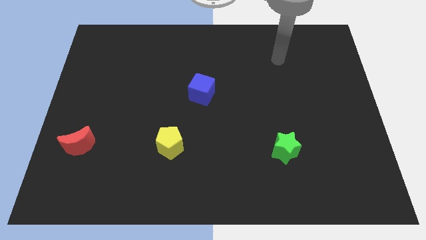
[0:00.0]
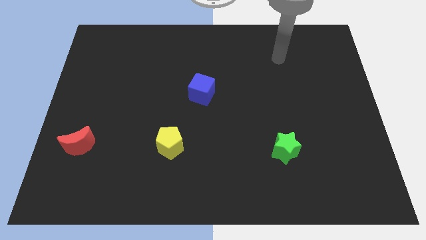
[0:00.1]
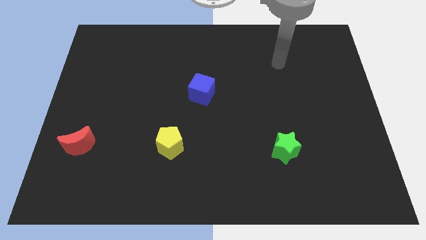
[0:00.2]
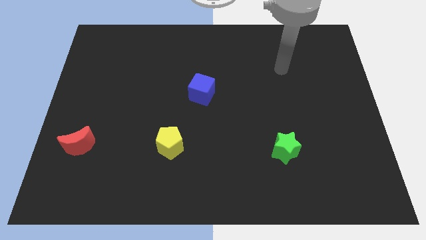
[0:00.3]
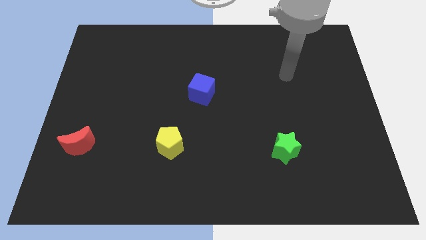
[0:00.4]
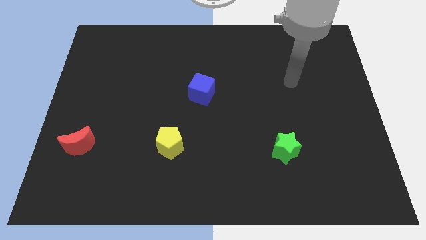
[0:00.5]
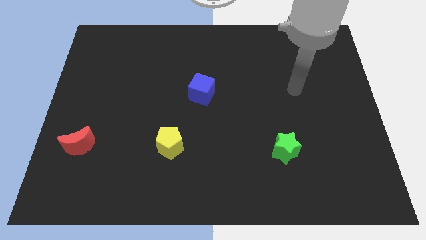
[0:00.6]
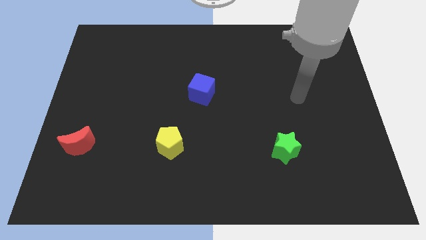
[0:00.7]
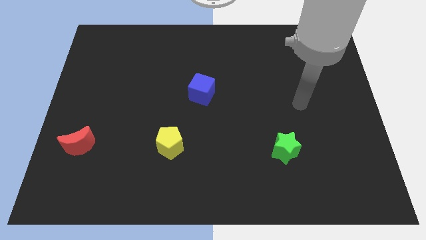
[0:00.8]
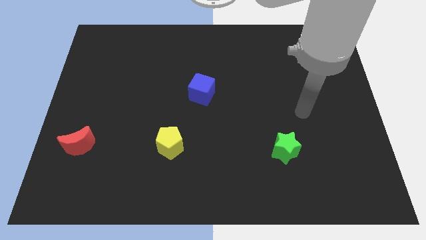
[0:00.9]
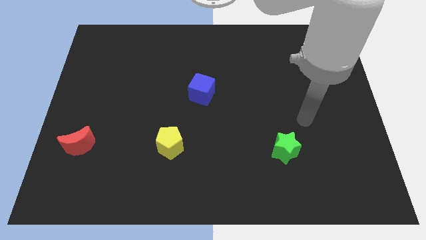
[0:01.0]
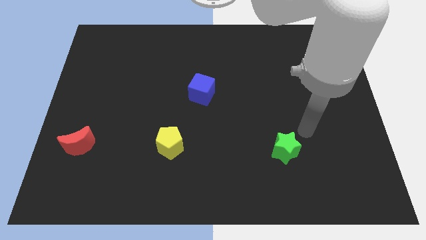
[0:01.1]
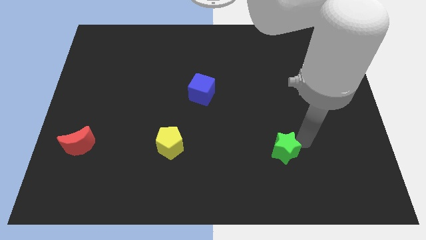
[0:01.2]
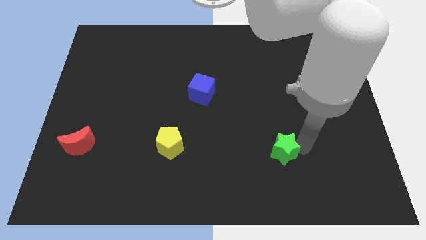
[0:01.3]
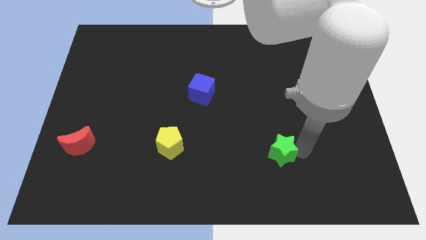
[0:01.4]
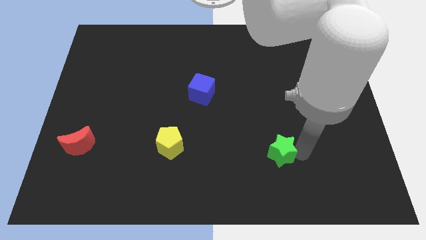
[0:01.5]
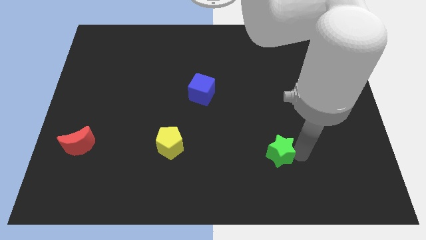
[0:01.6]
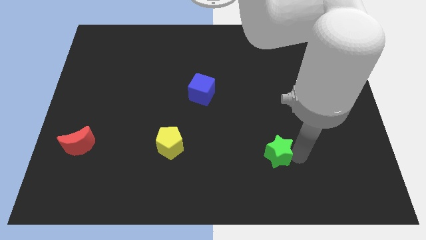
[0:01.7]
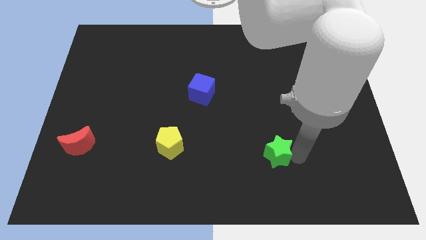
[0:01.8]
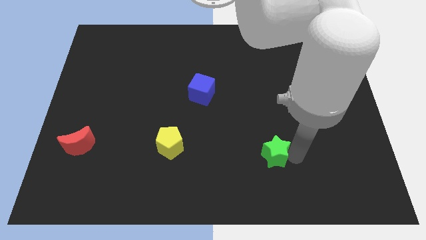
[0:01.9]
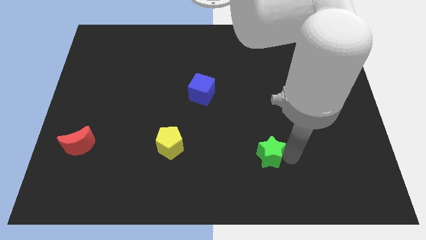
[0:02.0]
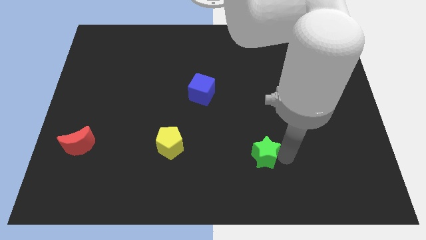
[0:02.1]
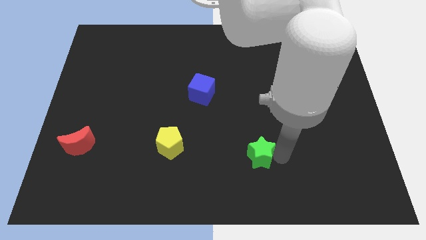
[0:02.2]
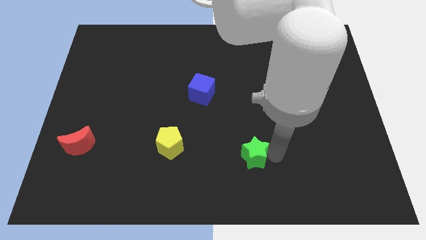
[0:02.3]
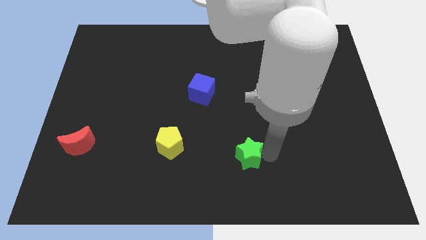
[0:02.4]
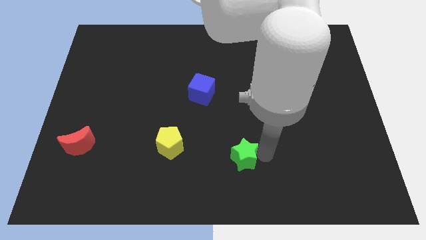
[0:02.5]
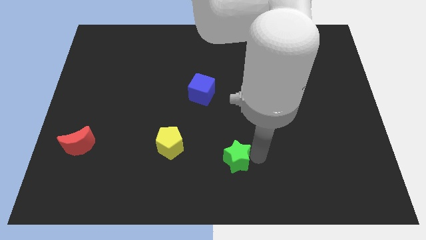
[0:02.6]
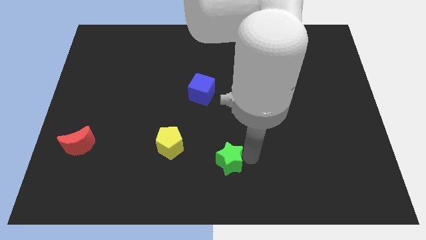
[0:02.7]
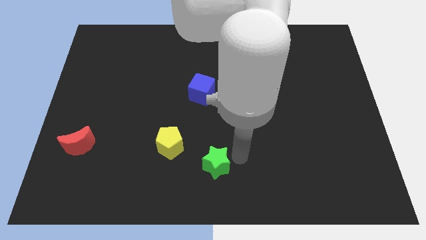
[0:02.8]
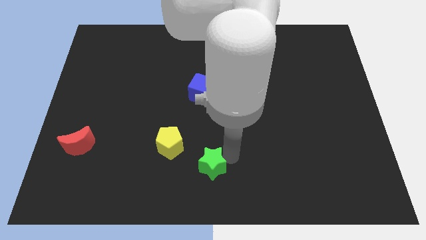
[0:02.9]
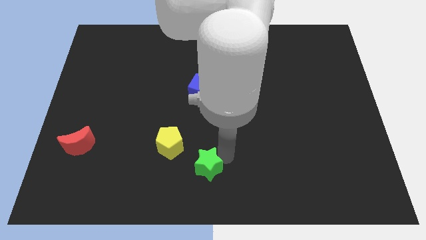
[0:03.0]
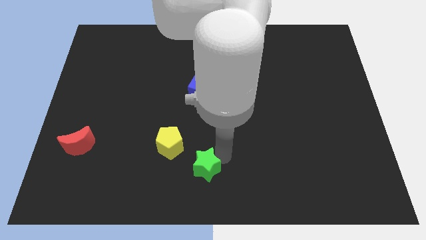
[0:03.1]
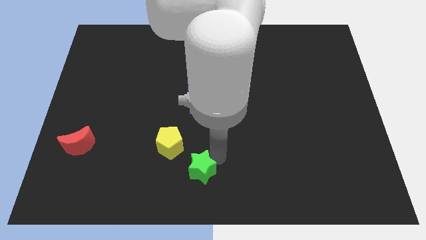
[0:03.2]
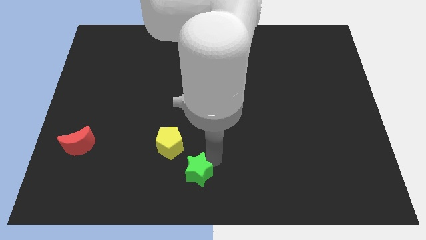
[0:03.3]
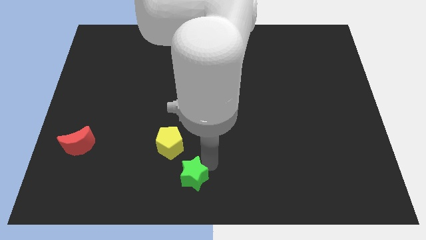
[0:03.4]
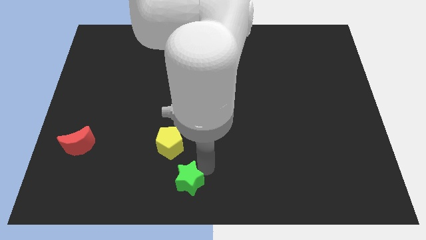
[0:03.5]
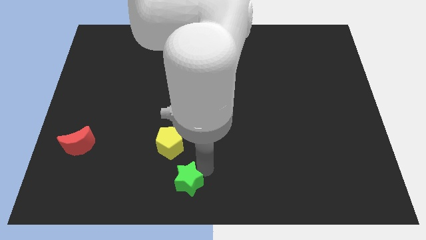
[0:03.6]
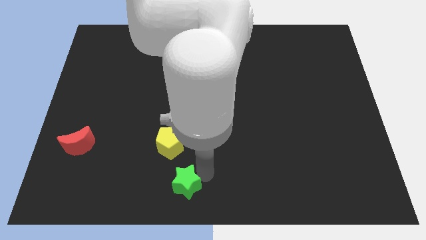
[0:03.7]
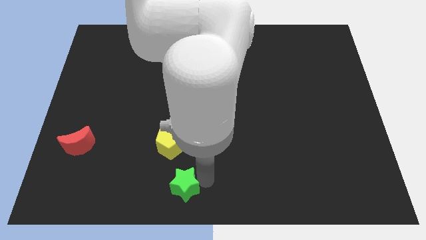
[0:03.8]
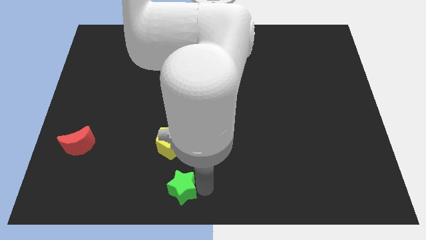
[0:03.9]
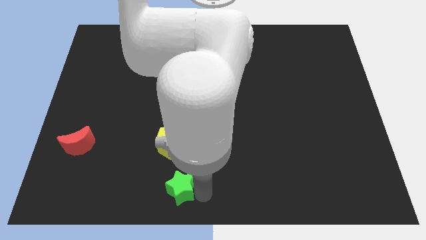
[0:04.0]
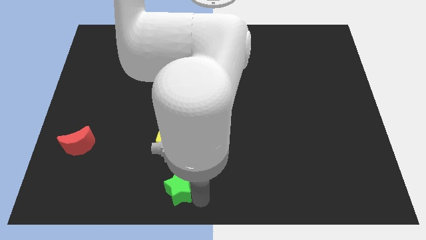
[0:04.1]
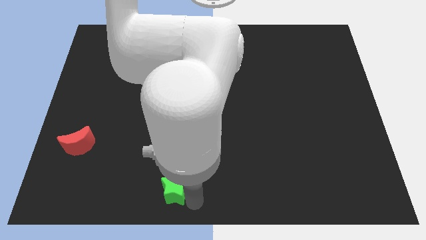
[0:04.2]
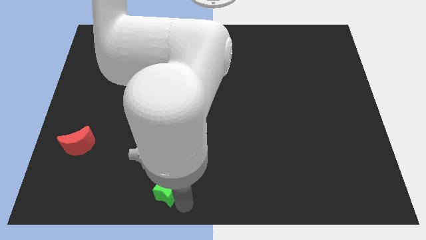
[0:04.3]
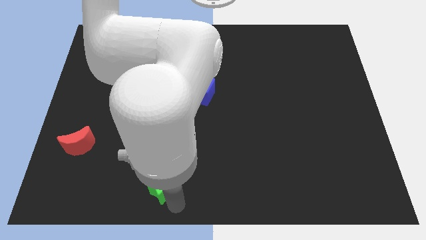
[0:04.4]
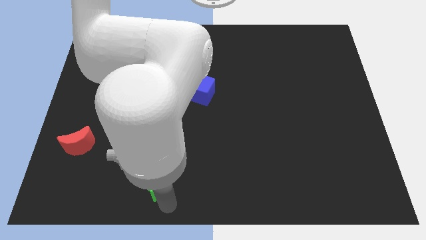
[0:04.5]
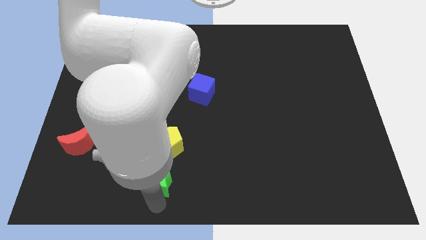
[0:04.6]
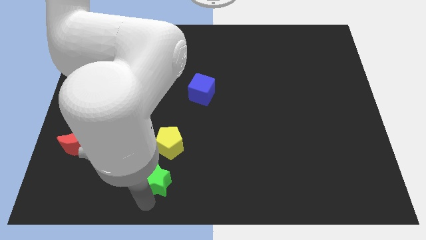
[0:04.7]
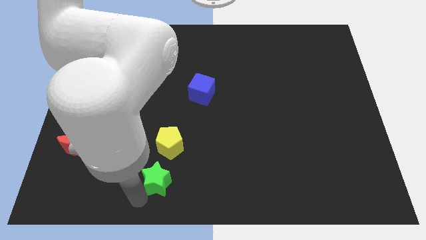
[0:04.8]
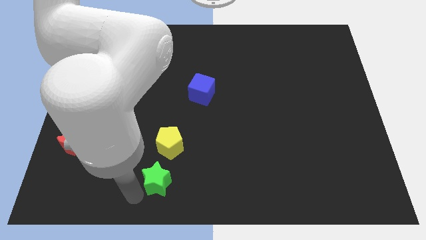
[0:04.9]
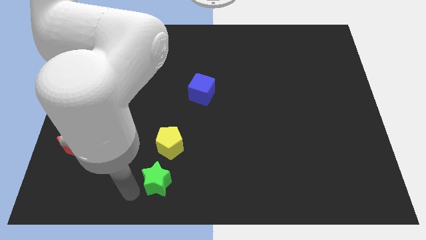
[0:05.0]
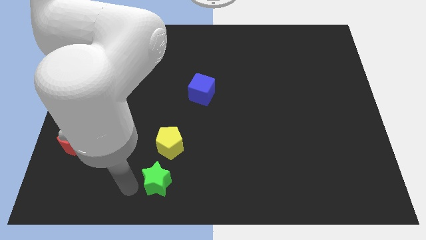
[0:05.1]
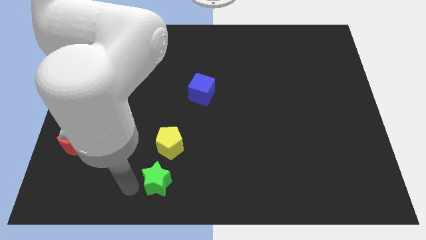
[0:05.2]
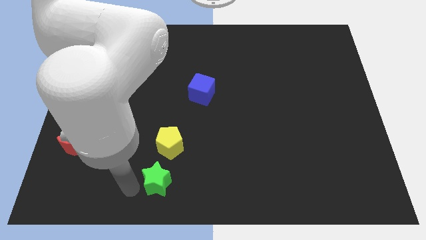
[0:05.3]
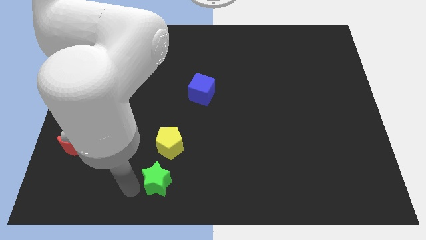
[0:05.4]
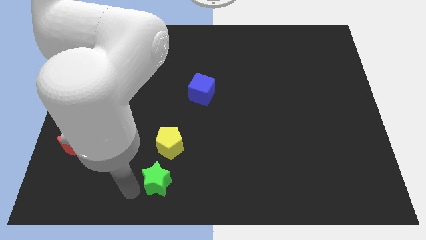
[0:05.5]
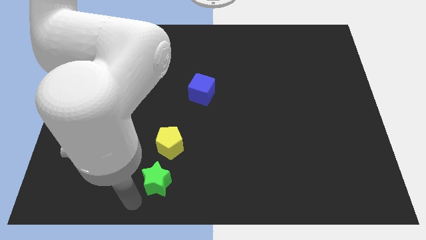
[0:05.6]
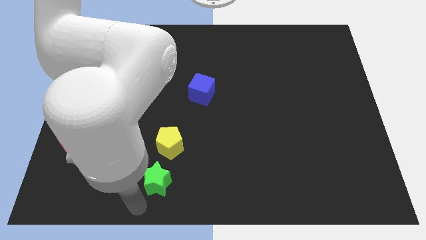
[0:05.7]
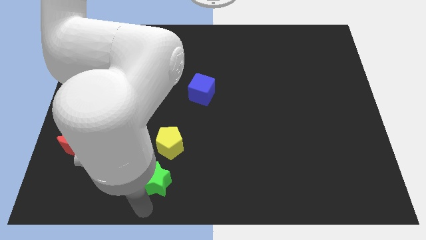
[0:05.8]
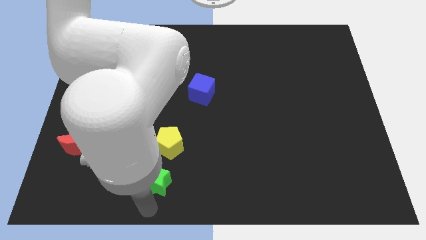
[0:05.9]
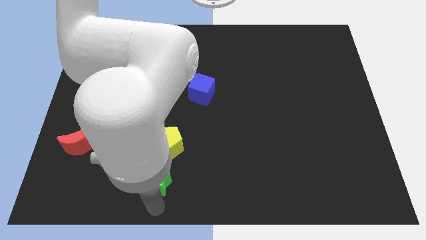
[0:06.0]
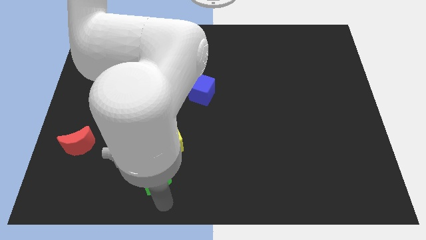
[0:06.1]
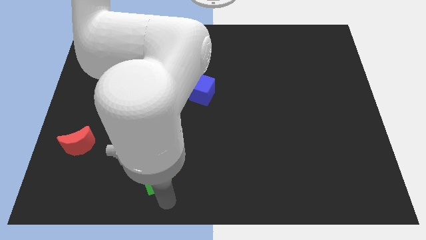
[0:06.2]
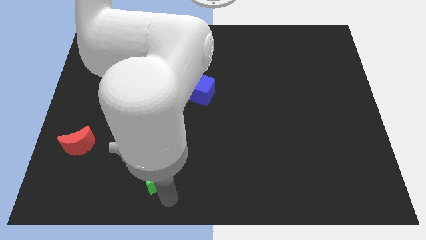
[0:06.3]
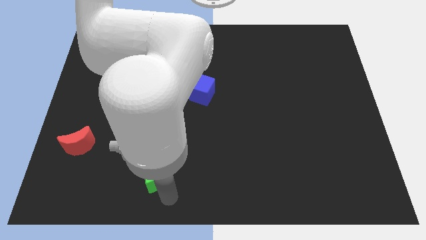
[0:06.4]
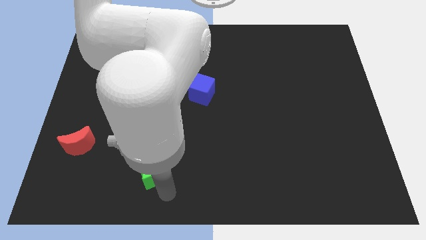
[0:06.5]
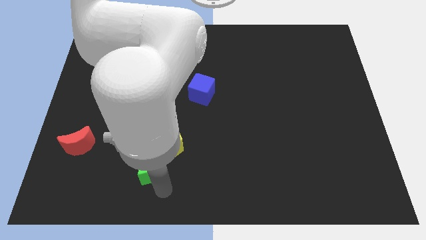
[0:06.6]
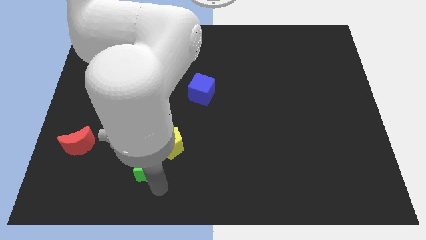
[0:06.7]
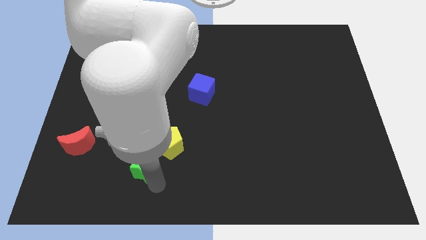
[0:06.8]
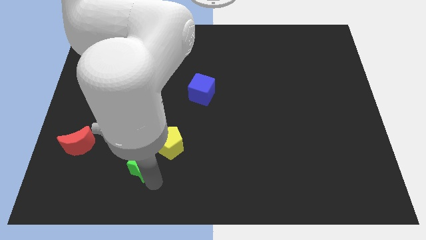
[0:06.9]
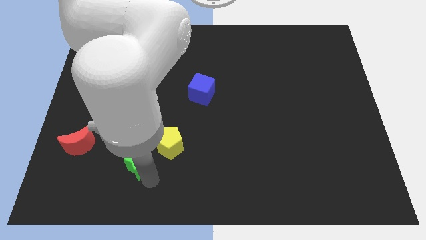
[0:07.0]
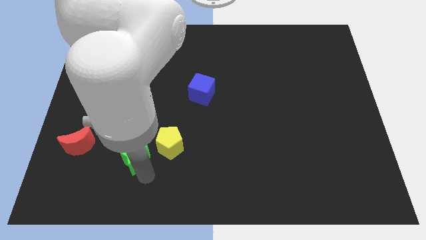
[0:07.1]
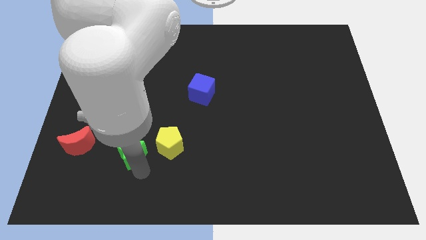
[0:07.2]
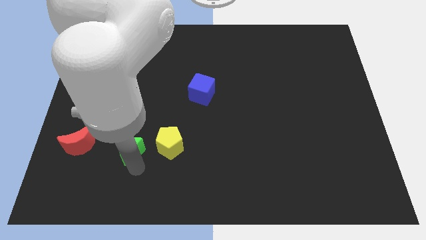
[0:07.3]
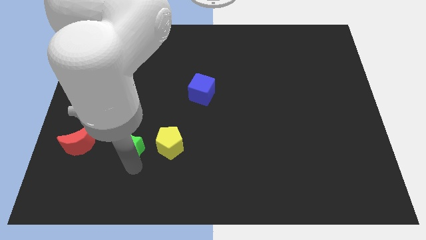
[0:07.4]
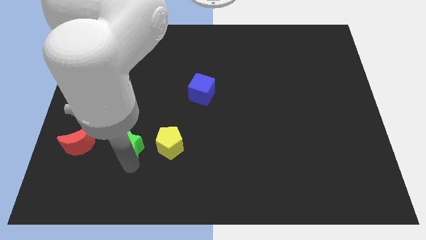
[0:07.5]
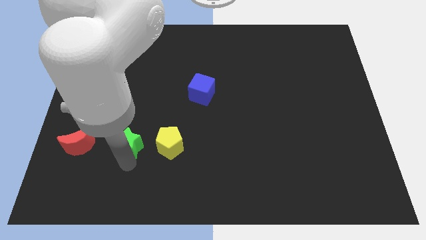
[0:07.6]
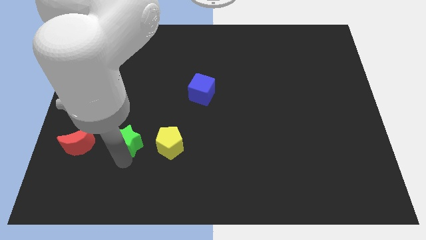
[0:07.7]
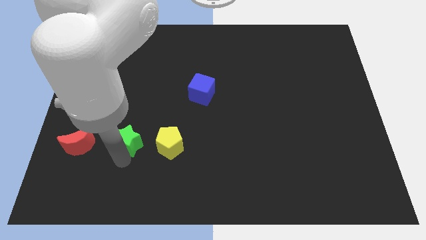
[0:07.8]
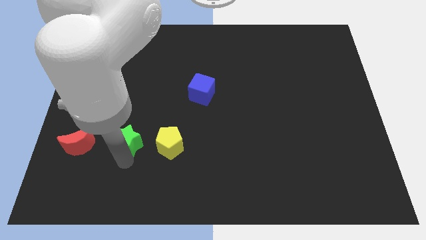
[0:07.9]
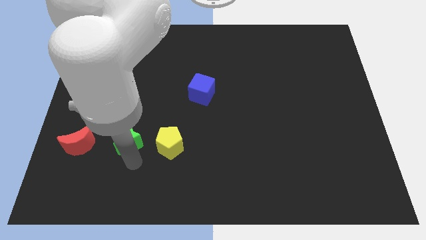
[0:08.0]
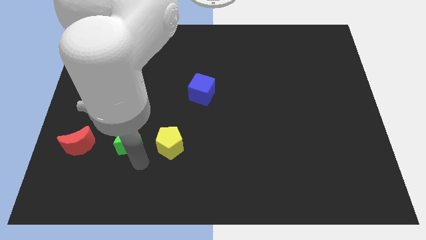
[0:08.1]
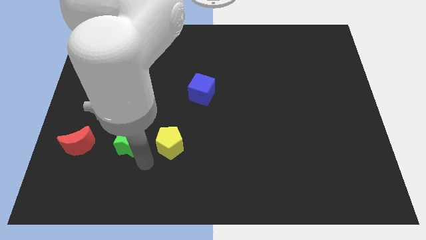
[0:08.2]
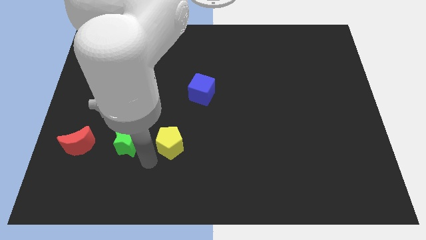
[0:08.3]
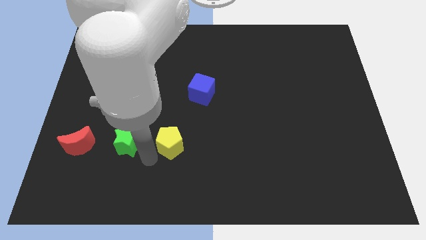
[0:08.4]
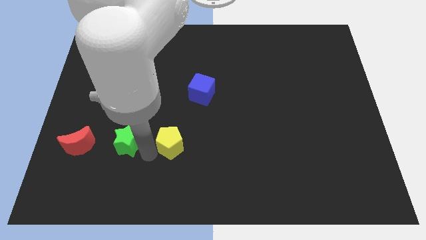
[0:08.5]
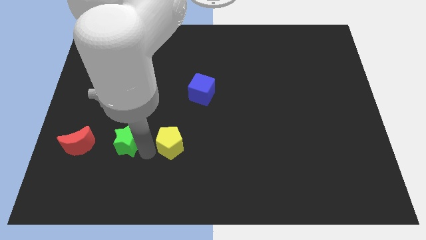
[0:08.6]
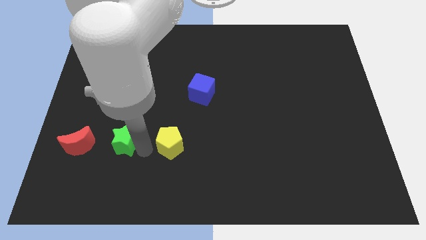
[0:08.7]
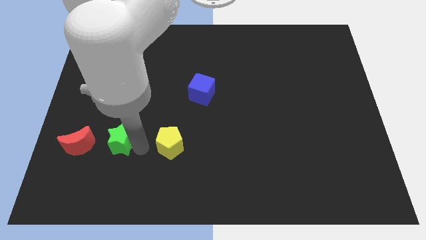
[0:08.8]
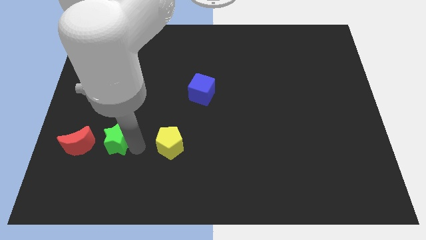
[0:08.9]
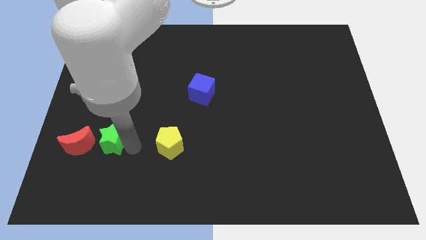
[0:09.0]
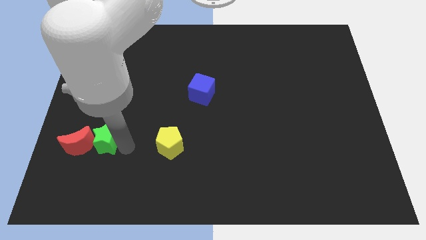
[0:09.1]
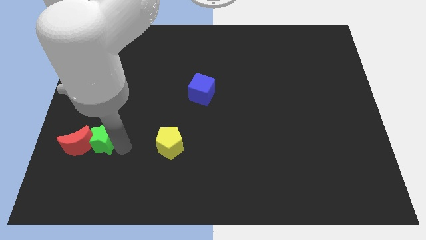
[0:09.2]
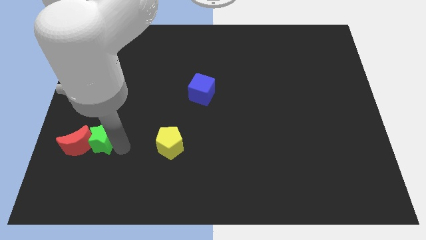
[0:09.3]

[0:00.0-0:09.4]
put the green block towards the red block
